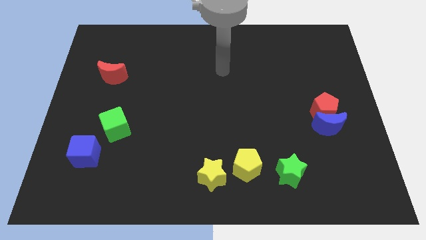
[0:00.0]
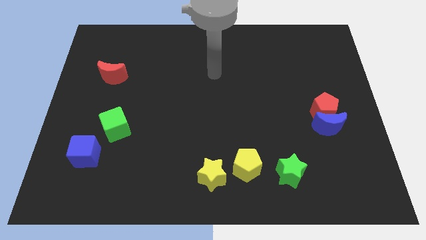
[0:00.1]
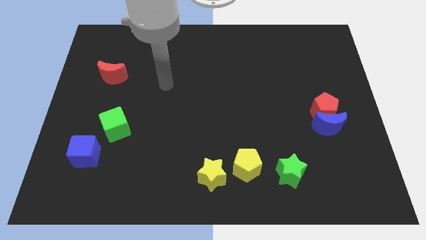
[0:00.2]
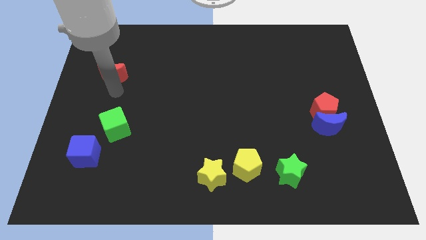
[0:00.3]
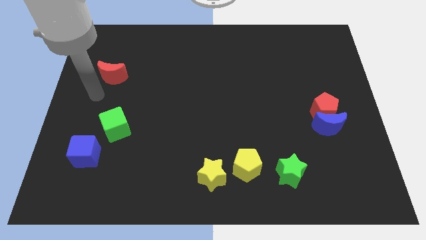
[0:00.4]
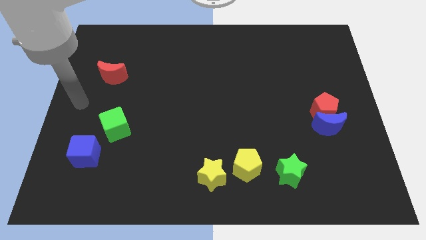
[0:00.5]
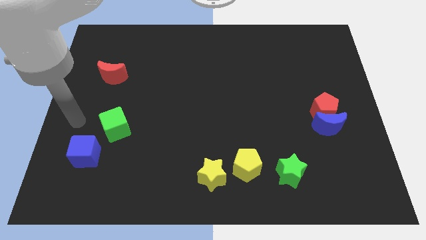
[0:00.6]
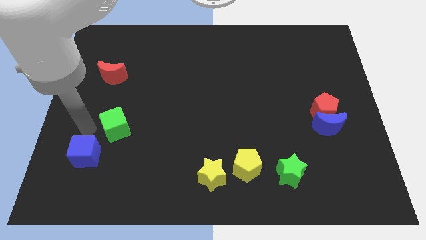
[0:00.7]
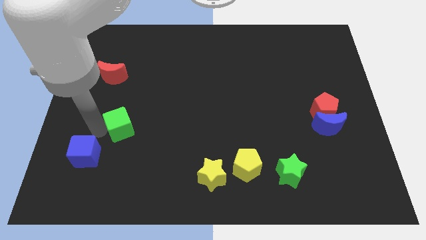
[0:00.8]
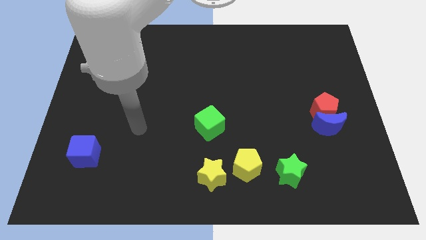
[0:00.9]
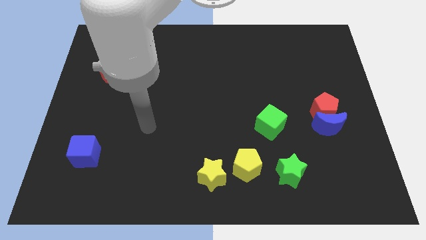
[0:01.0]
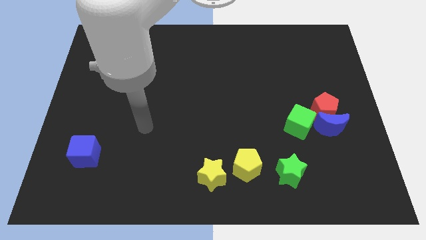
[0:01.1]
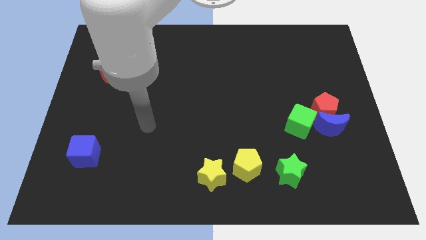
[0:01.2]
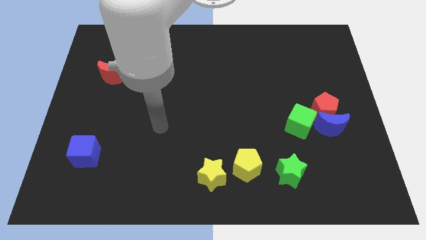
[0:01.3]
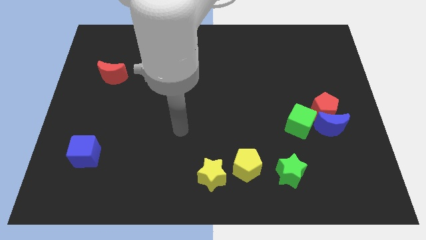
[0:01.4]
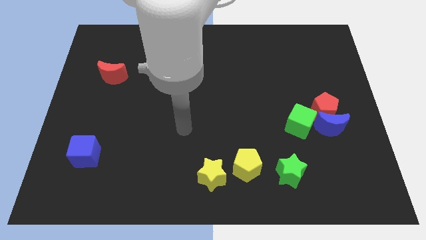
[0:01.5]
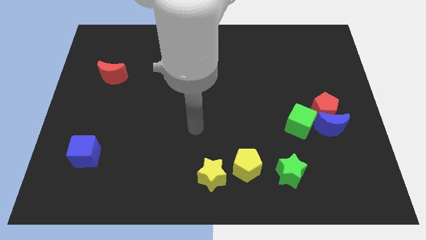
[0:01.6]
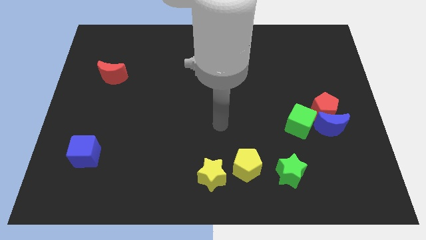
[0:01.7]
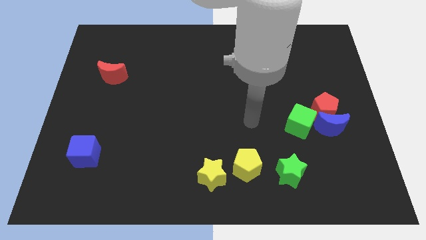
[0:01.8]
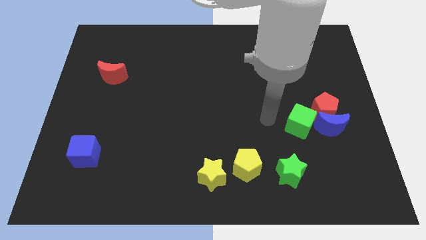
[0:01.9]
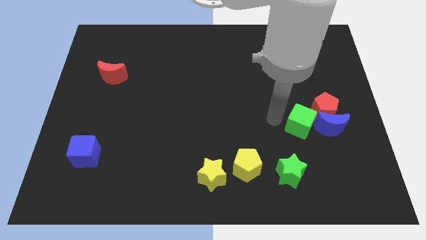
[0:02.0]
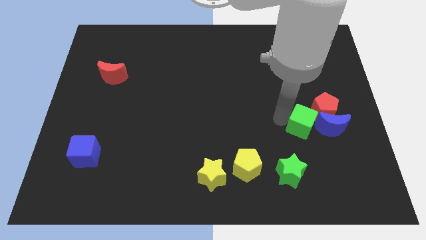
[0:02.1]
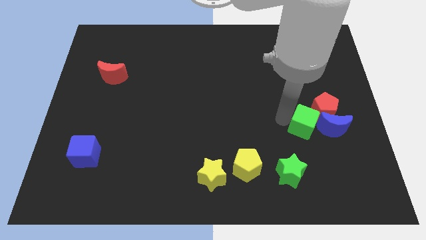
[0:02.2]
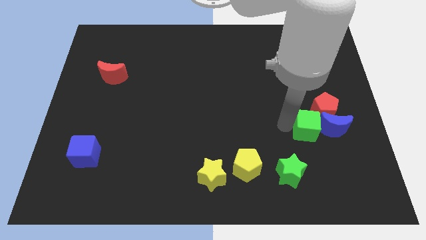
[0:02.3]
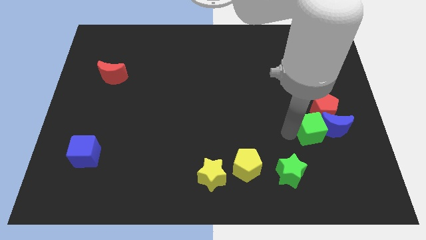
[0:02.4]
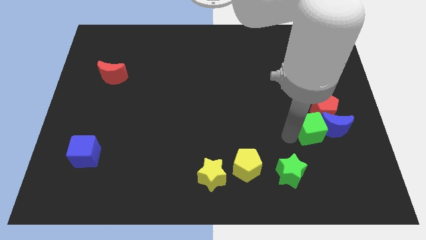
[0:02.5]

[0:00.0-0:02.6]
slide the green cube close to the blue moon

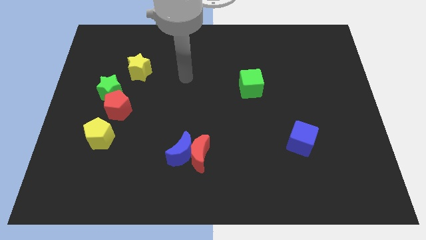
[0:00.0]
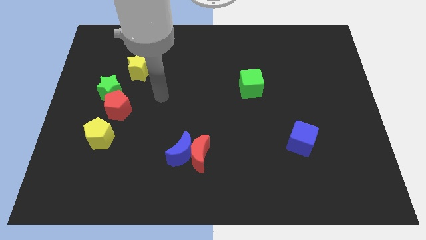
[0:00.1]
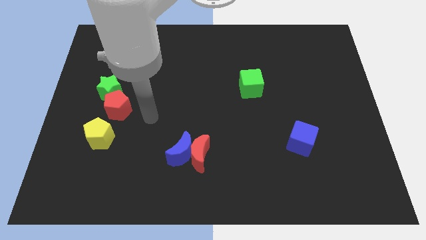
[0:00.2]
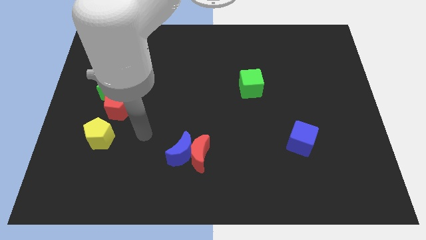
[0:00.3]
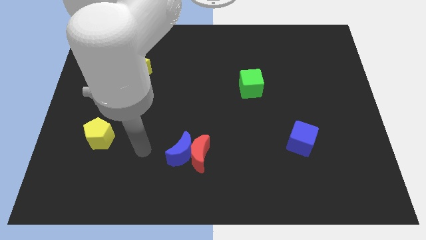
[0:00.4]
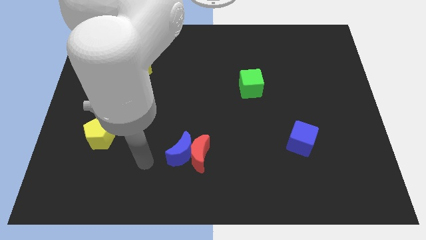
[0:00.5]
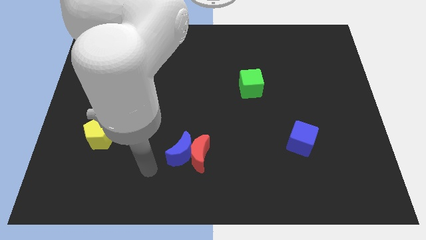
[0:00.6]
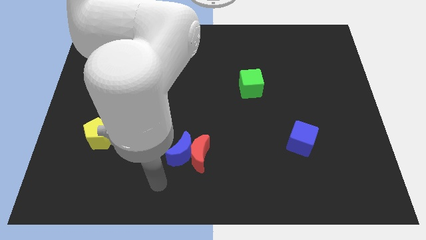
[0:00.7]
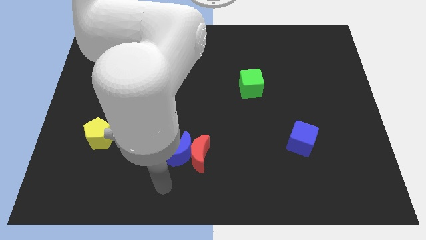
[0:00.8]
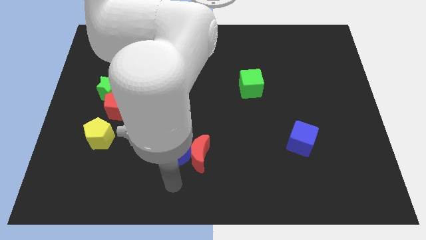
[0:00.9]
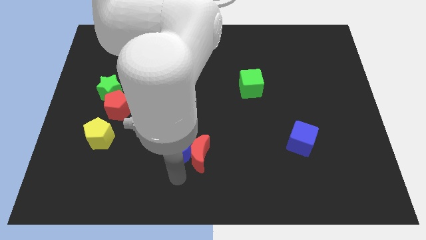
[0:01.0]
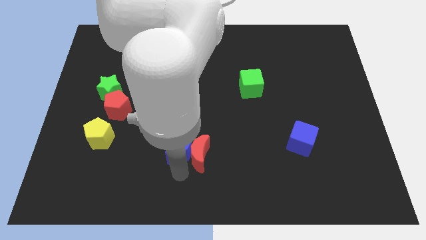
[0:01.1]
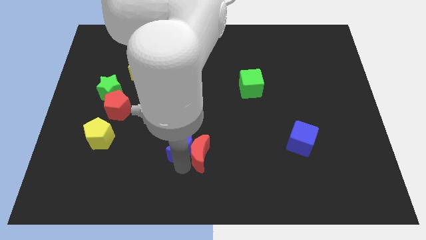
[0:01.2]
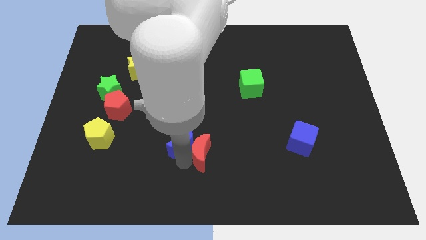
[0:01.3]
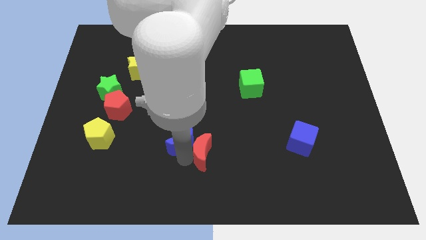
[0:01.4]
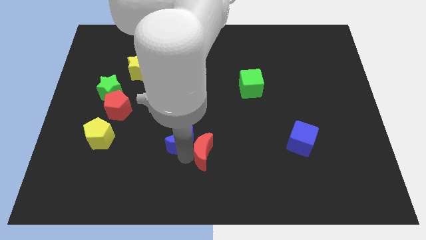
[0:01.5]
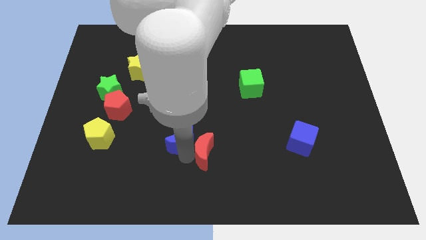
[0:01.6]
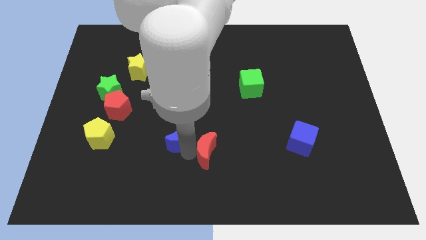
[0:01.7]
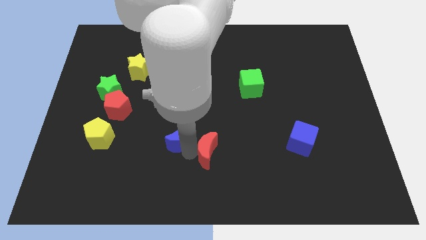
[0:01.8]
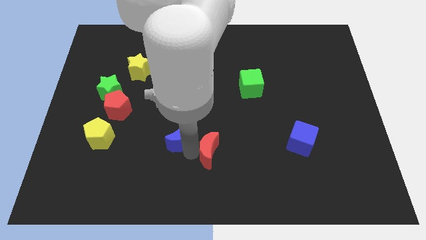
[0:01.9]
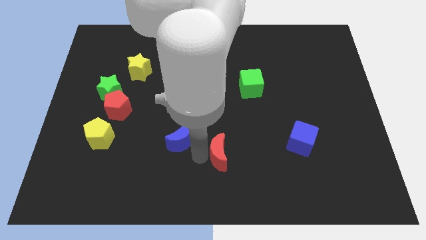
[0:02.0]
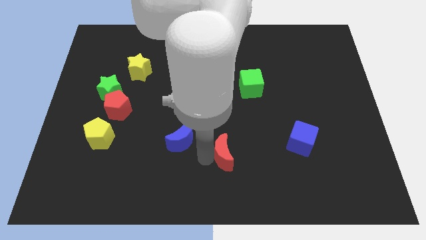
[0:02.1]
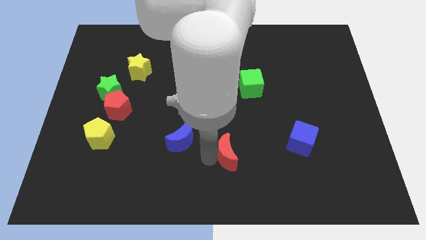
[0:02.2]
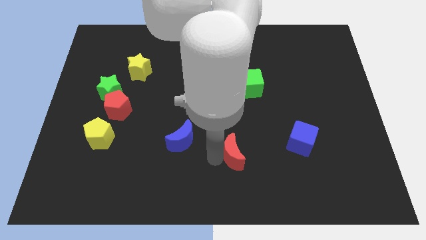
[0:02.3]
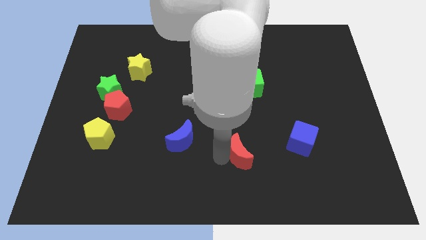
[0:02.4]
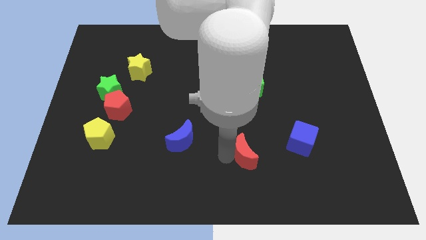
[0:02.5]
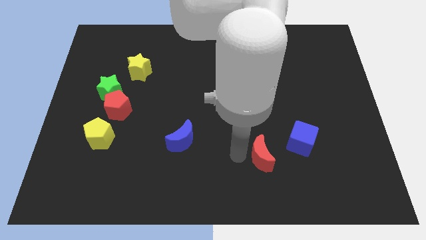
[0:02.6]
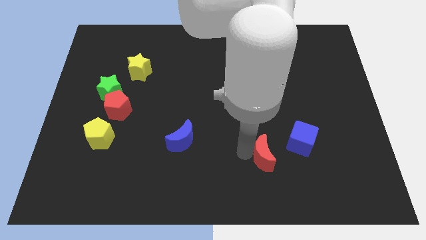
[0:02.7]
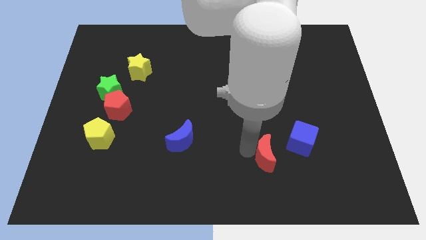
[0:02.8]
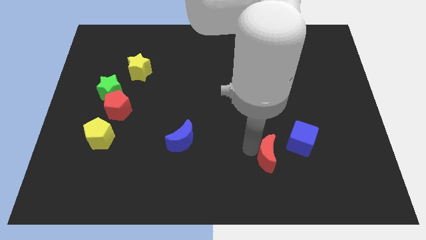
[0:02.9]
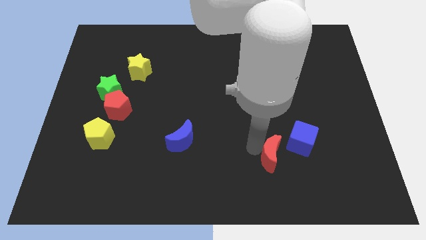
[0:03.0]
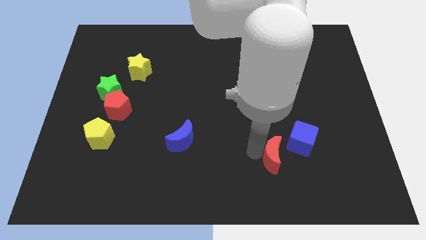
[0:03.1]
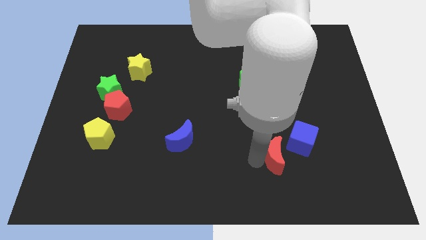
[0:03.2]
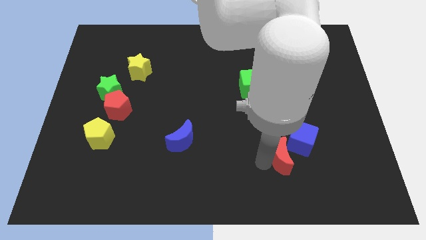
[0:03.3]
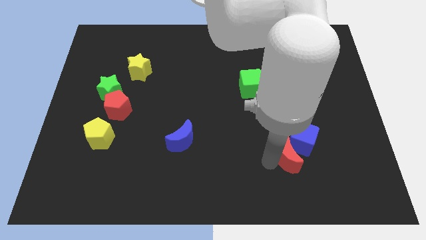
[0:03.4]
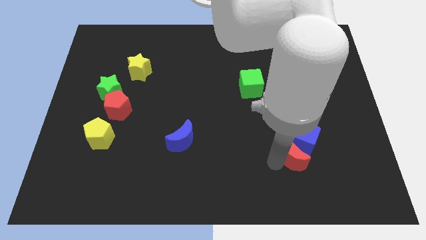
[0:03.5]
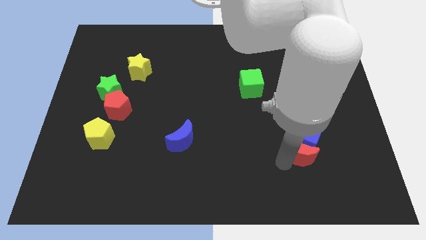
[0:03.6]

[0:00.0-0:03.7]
push the red moon close to the blue cube

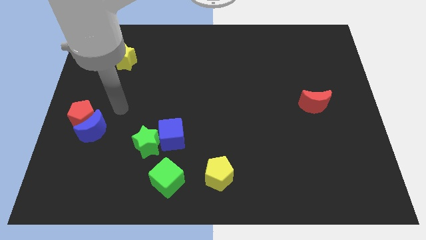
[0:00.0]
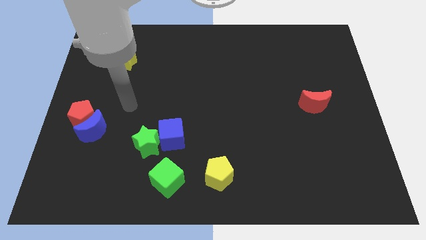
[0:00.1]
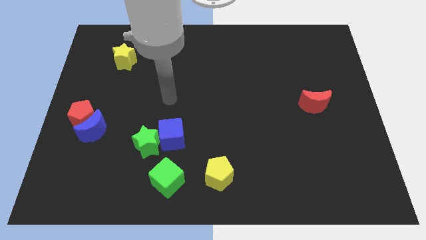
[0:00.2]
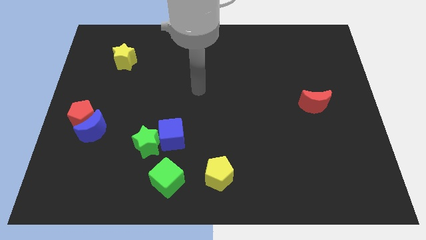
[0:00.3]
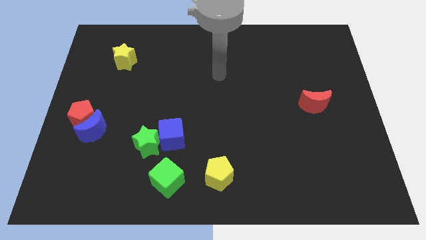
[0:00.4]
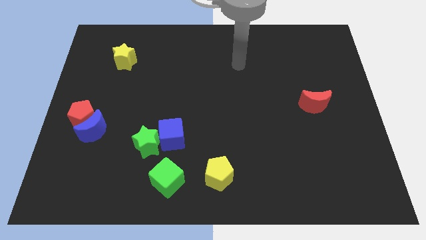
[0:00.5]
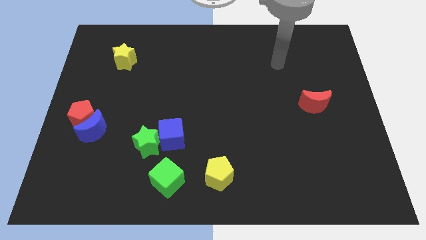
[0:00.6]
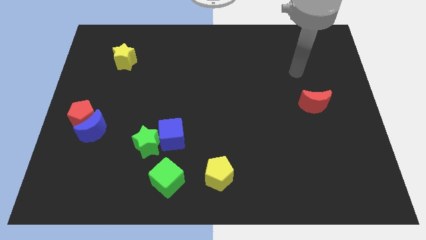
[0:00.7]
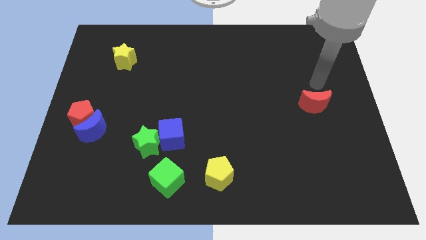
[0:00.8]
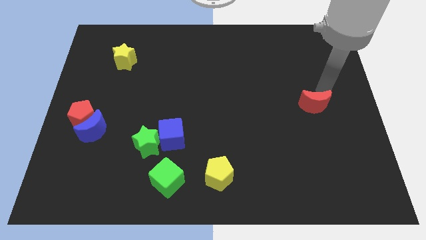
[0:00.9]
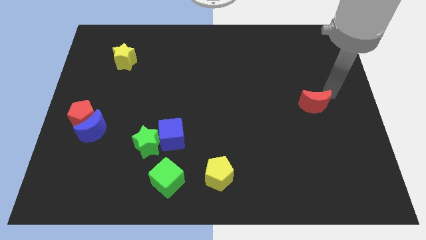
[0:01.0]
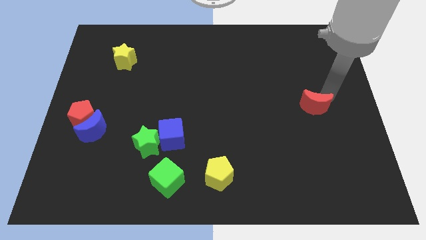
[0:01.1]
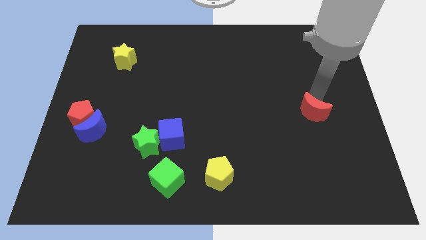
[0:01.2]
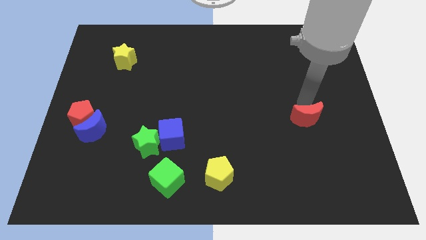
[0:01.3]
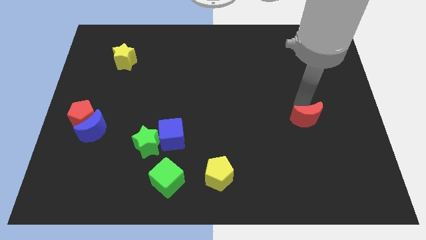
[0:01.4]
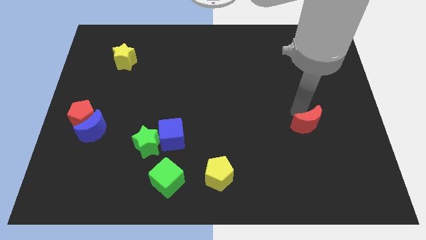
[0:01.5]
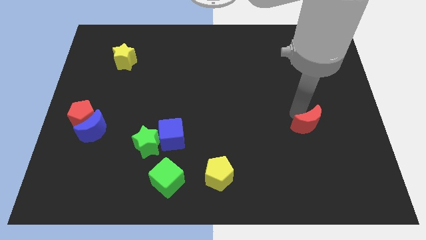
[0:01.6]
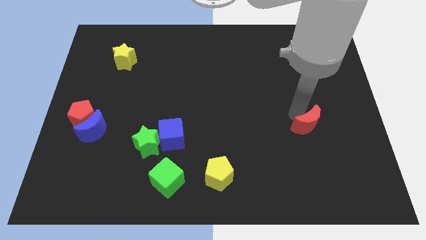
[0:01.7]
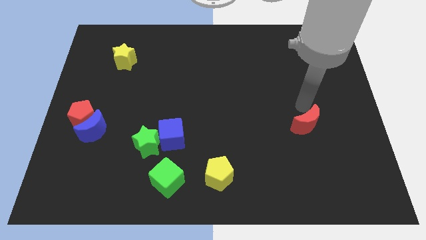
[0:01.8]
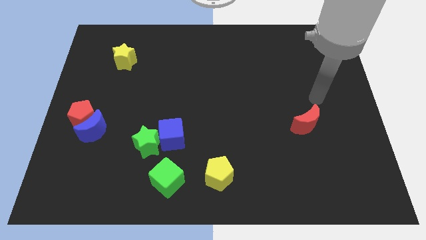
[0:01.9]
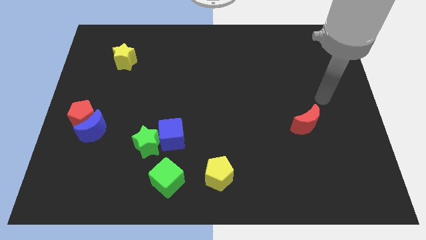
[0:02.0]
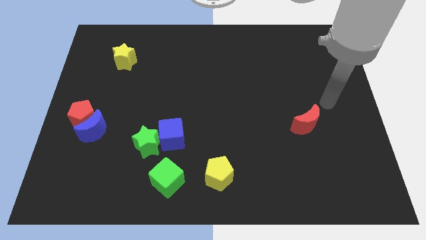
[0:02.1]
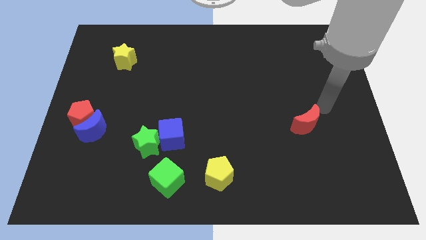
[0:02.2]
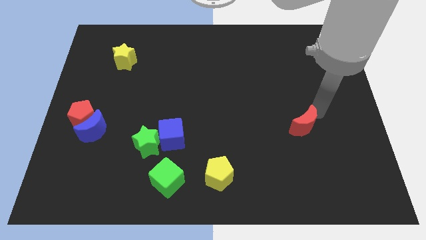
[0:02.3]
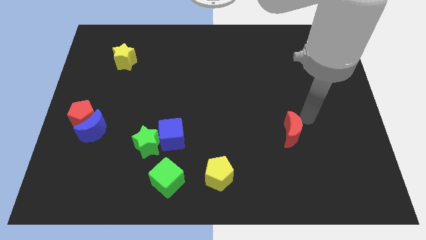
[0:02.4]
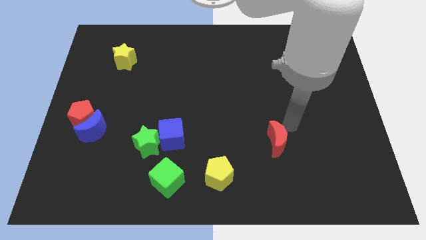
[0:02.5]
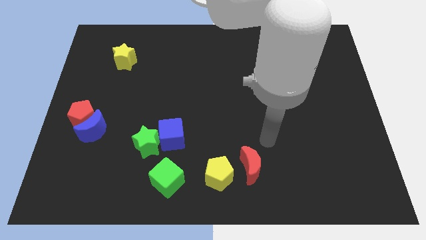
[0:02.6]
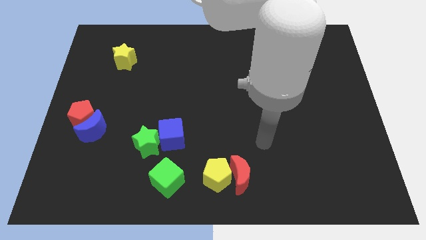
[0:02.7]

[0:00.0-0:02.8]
slide the red moon next to the yellow pentagon
